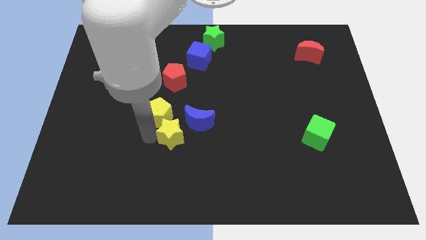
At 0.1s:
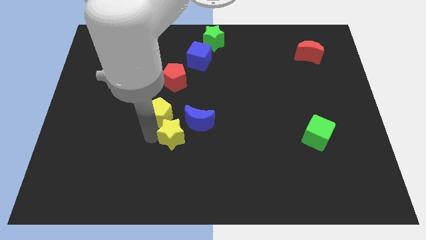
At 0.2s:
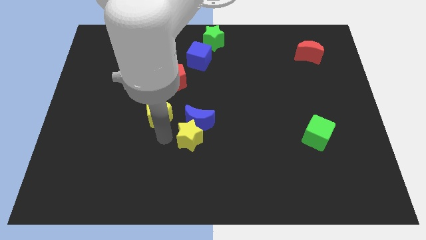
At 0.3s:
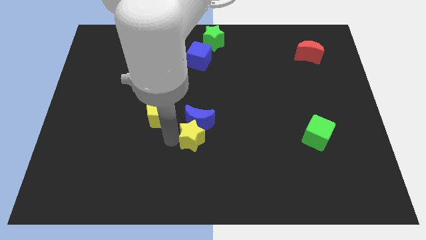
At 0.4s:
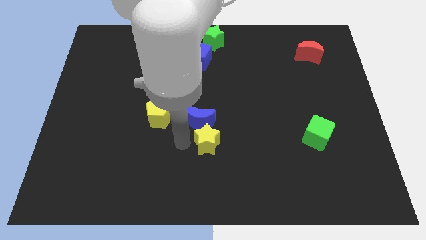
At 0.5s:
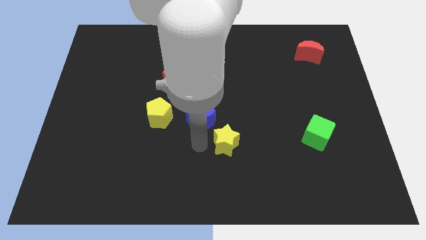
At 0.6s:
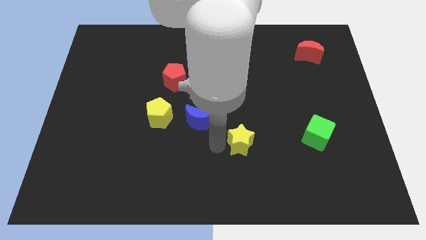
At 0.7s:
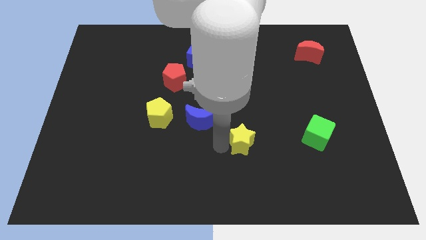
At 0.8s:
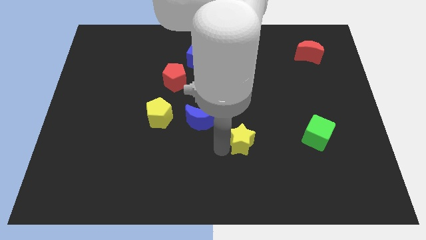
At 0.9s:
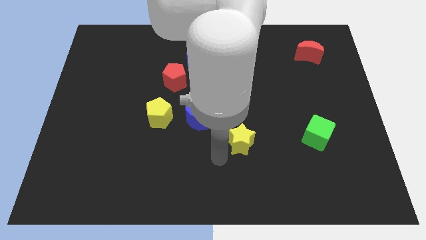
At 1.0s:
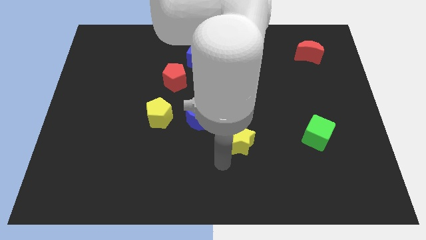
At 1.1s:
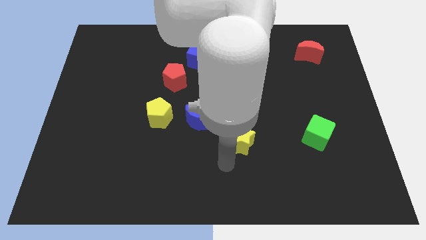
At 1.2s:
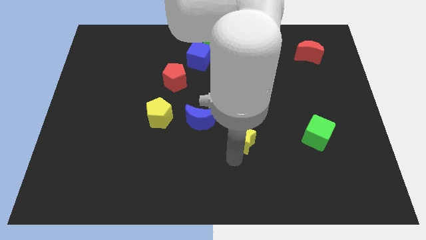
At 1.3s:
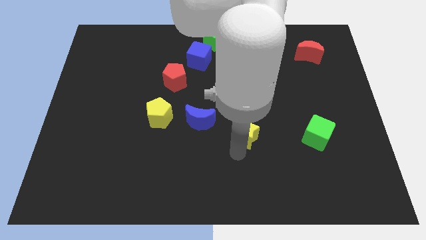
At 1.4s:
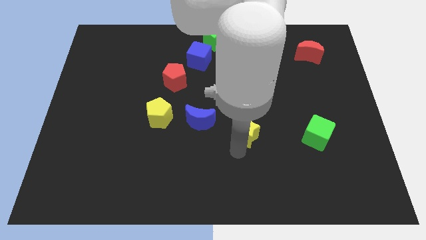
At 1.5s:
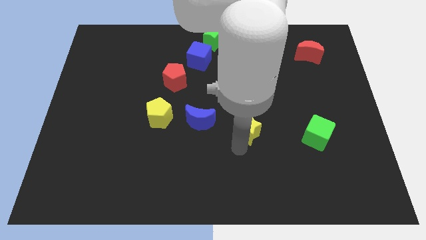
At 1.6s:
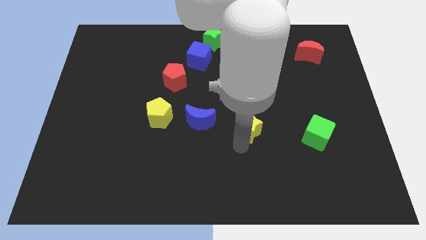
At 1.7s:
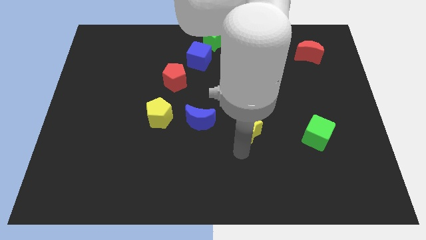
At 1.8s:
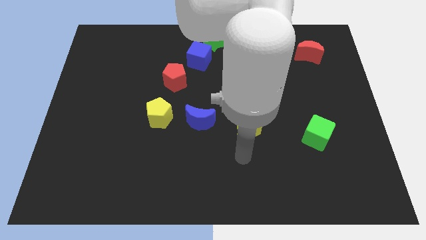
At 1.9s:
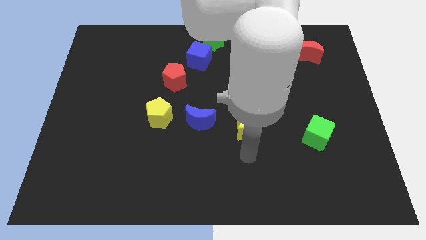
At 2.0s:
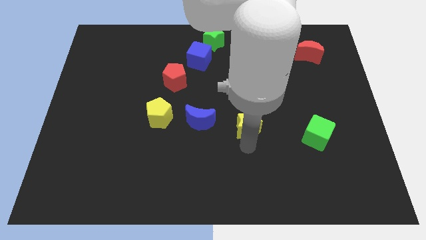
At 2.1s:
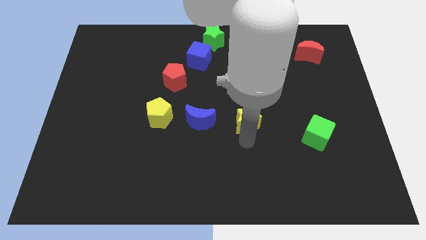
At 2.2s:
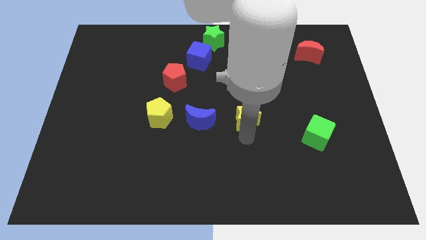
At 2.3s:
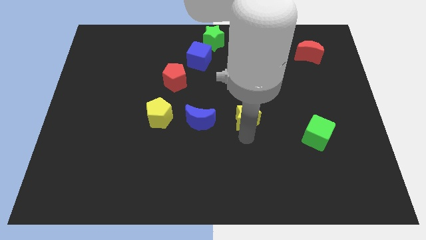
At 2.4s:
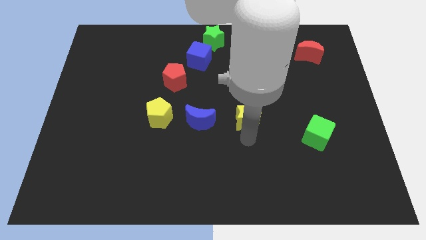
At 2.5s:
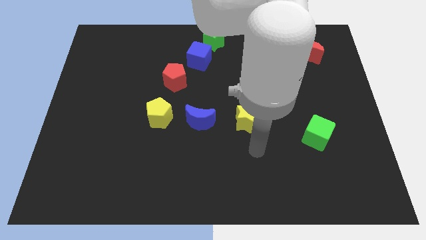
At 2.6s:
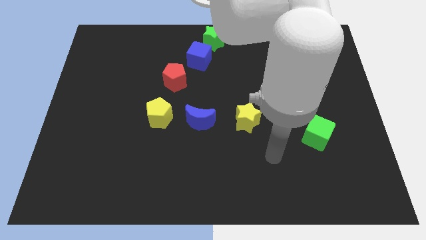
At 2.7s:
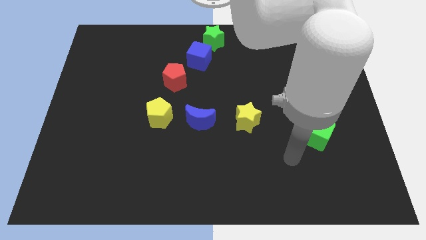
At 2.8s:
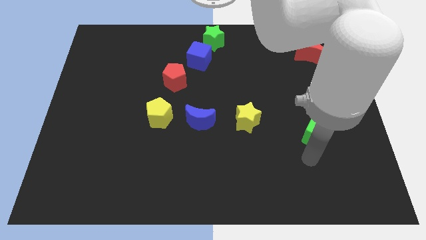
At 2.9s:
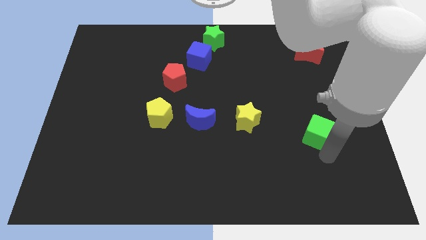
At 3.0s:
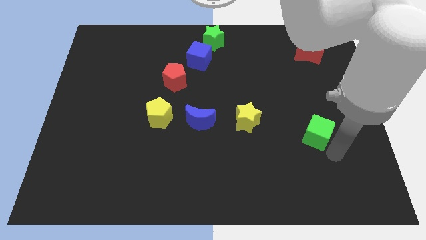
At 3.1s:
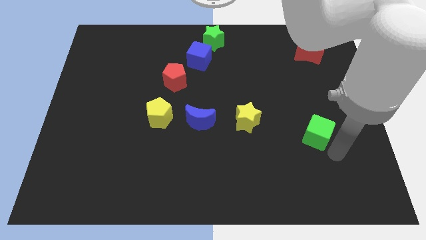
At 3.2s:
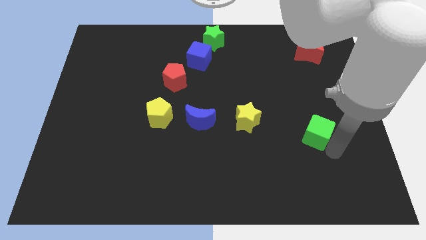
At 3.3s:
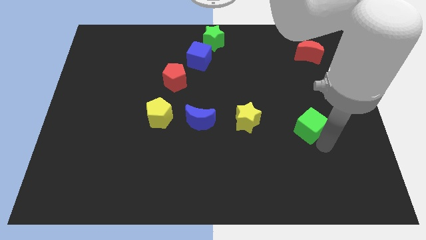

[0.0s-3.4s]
slide the yellow star to the right side of the blue crescent

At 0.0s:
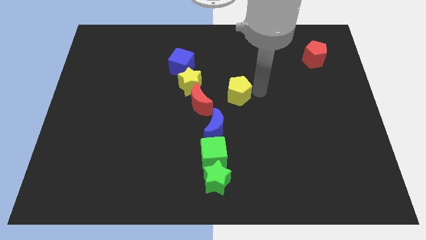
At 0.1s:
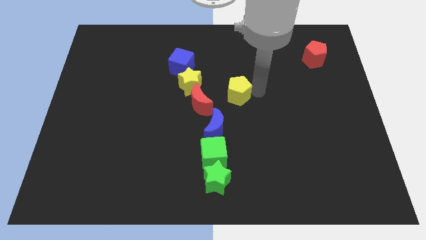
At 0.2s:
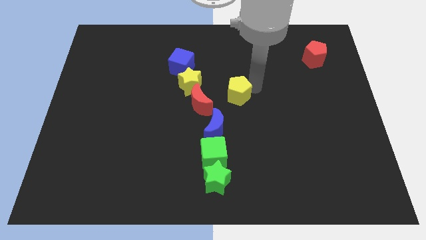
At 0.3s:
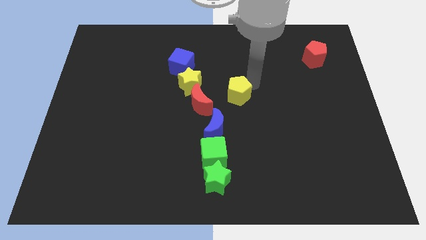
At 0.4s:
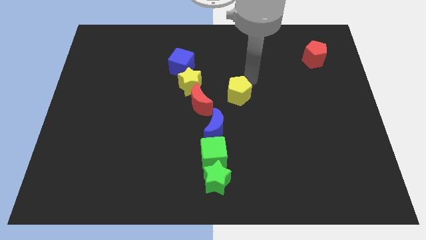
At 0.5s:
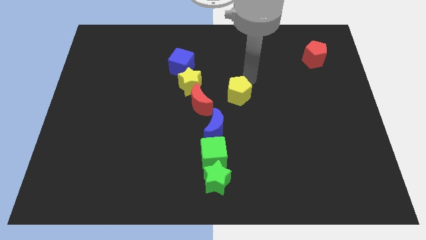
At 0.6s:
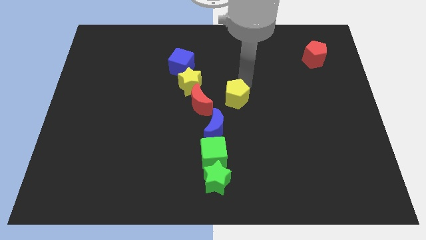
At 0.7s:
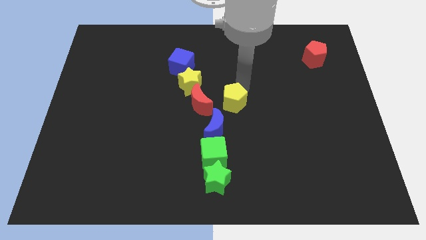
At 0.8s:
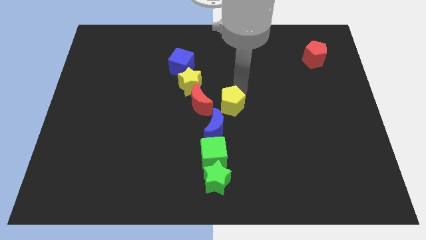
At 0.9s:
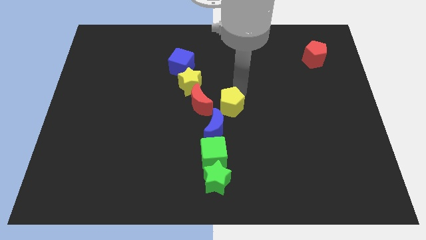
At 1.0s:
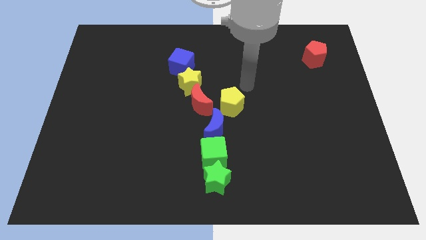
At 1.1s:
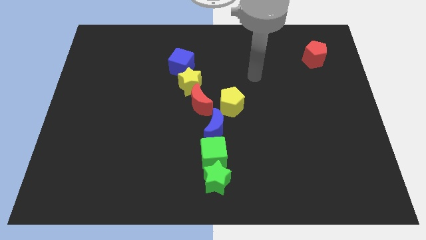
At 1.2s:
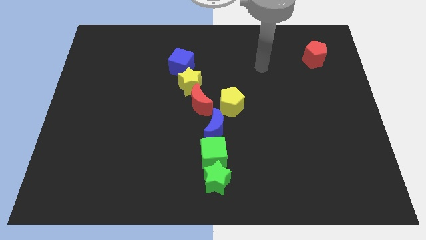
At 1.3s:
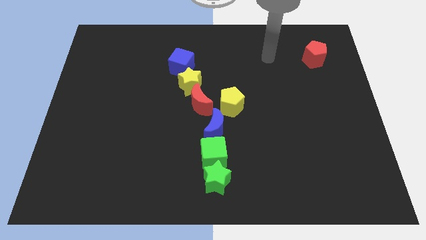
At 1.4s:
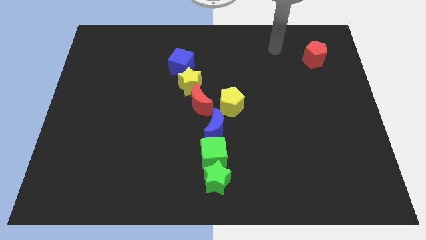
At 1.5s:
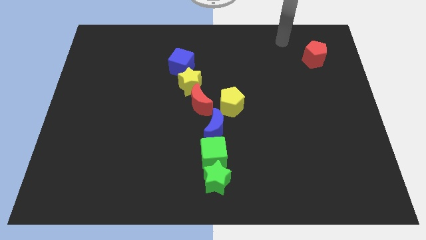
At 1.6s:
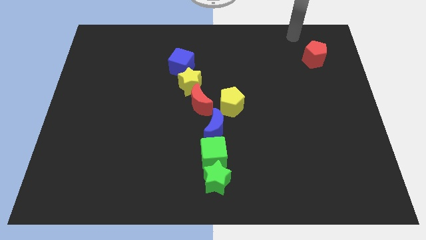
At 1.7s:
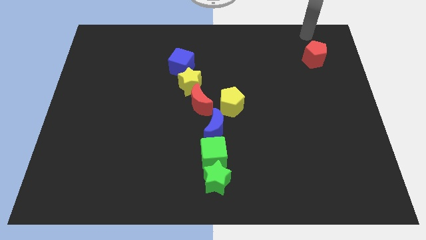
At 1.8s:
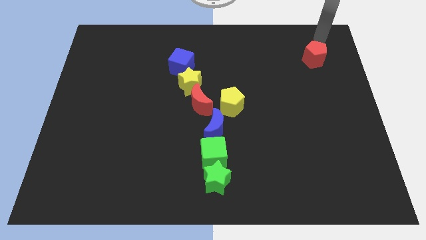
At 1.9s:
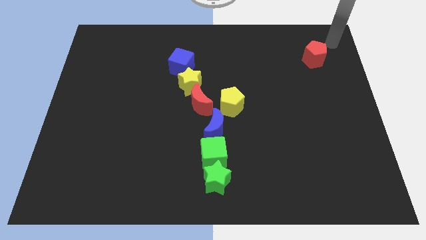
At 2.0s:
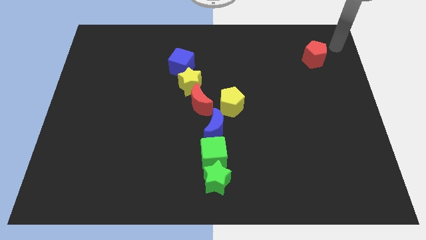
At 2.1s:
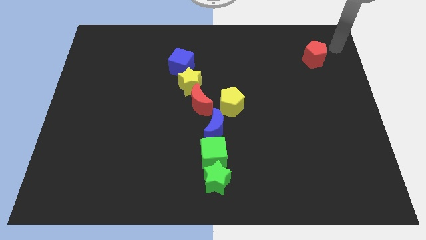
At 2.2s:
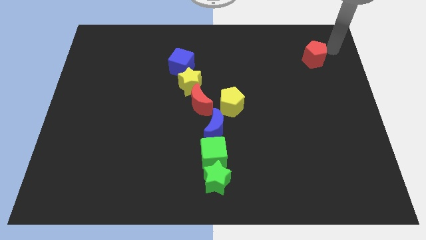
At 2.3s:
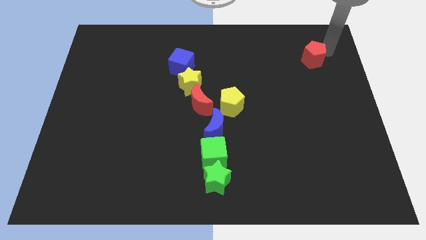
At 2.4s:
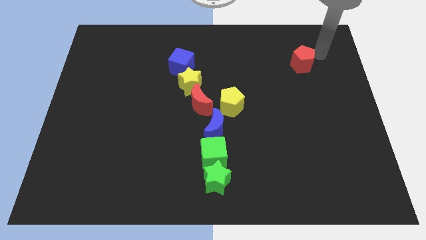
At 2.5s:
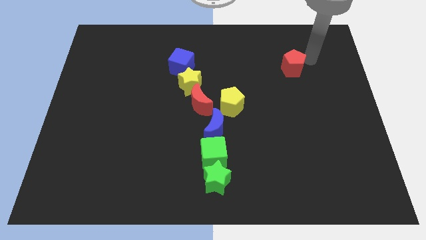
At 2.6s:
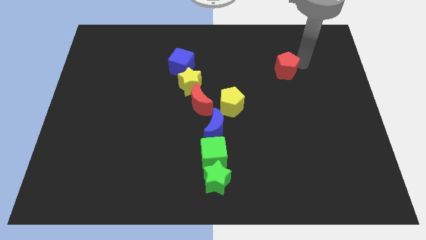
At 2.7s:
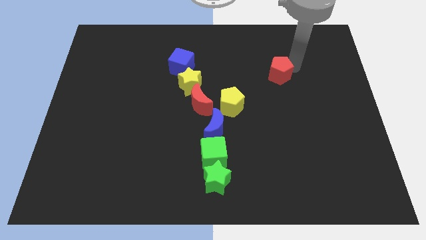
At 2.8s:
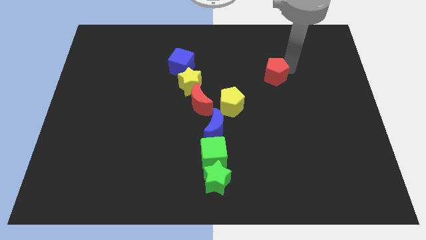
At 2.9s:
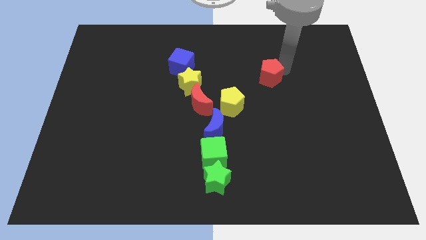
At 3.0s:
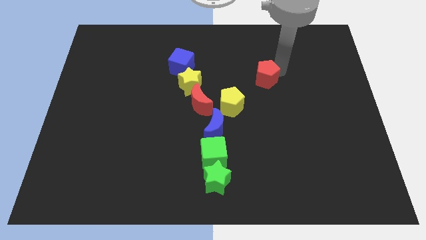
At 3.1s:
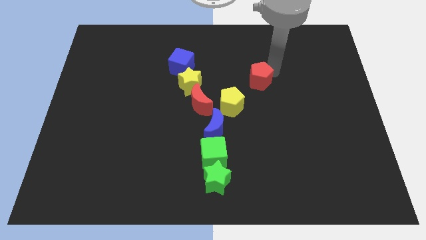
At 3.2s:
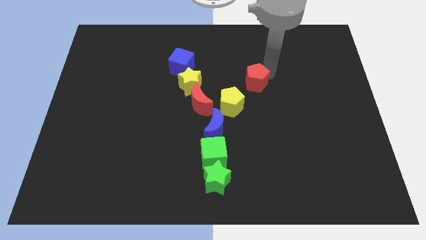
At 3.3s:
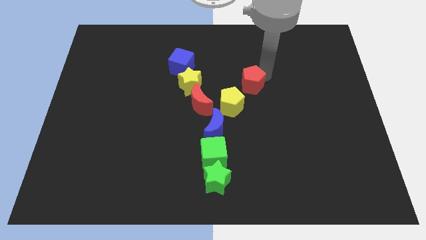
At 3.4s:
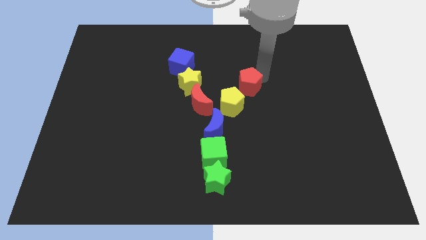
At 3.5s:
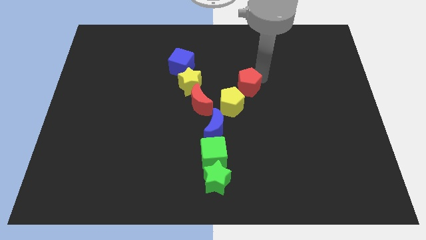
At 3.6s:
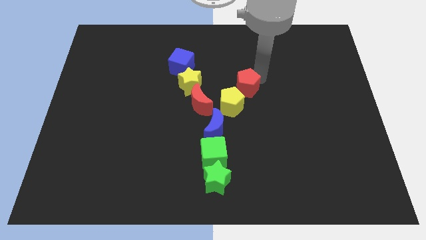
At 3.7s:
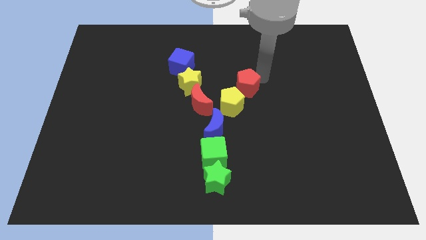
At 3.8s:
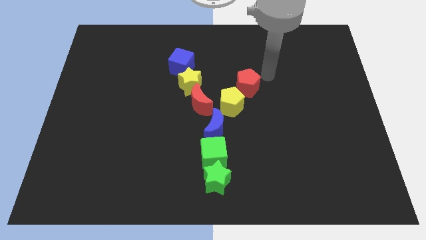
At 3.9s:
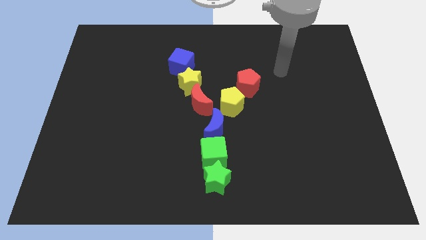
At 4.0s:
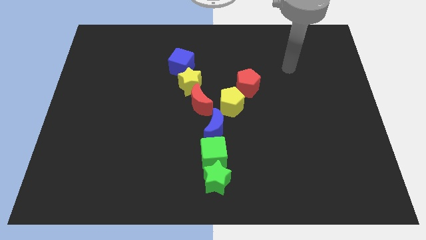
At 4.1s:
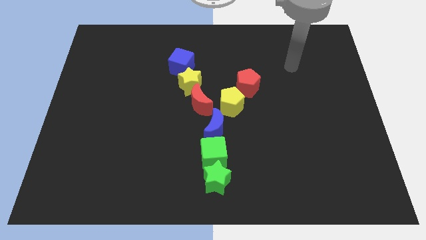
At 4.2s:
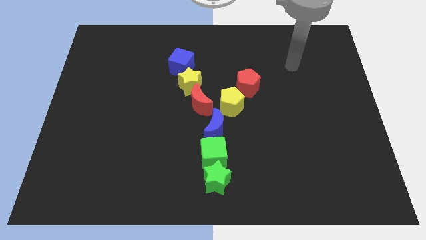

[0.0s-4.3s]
move the yellow pentagon and the red pentagon towards the center of the board

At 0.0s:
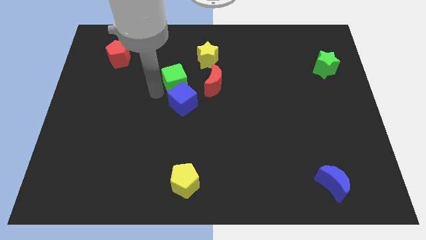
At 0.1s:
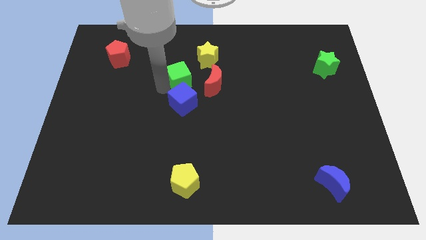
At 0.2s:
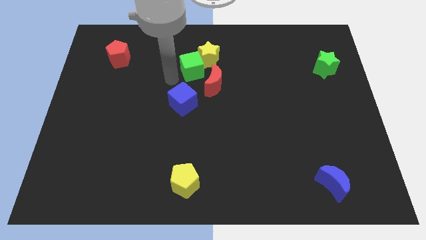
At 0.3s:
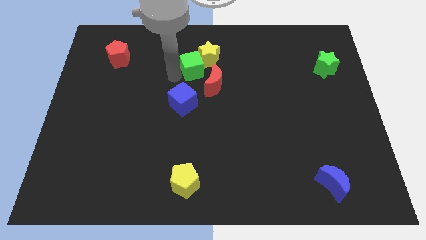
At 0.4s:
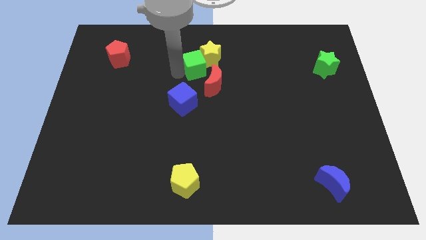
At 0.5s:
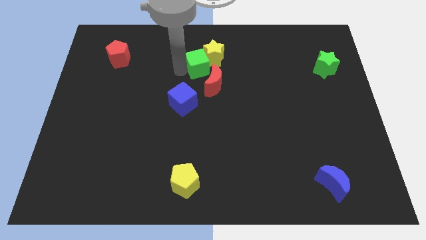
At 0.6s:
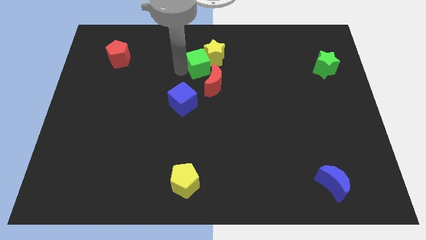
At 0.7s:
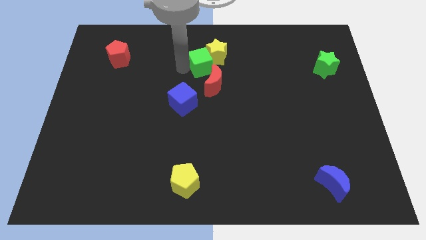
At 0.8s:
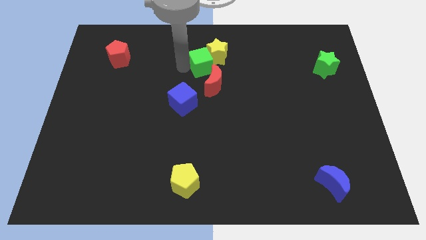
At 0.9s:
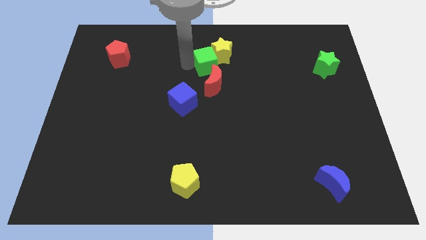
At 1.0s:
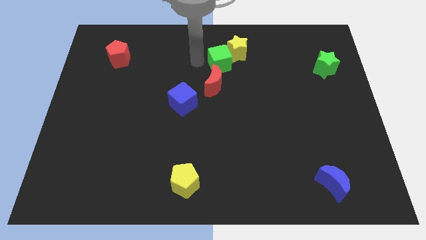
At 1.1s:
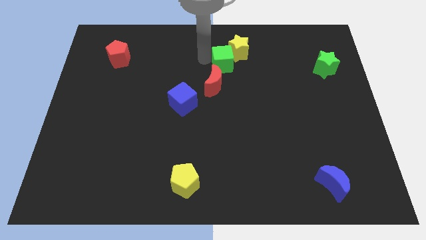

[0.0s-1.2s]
move the green cube into the left side of the yellow star
